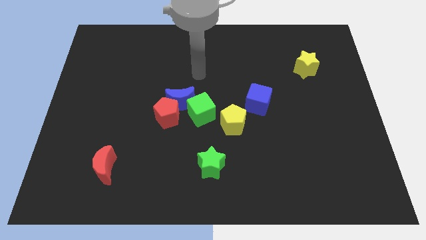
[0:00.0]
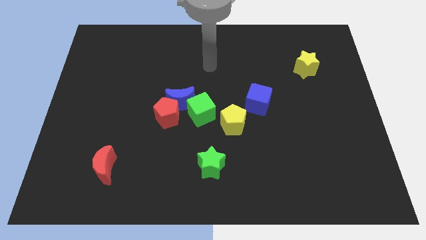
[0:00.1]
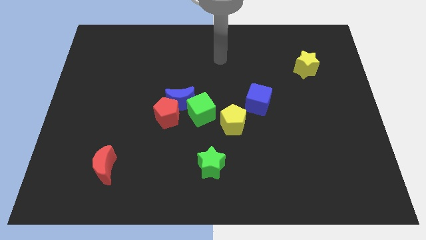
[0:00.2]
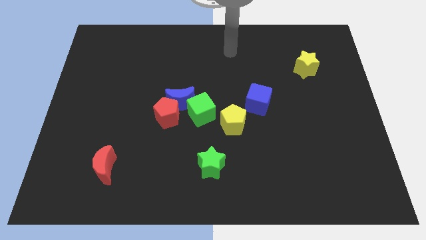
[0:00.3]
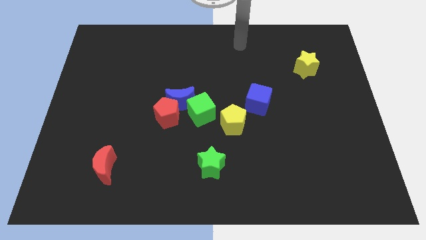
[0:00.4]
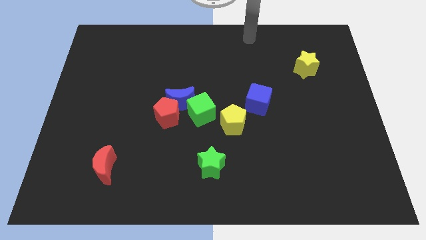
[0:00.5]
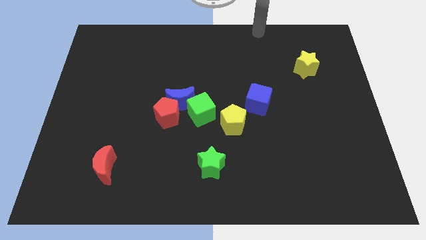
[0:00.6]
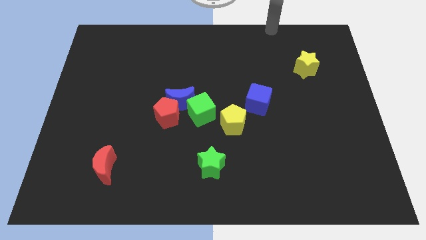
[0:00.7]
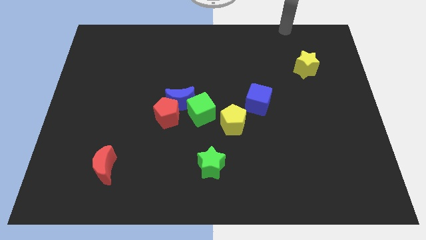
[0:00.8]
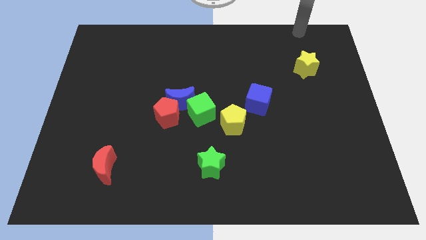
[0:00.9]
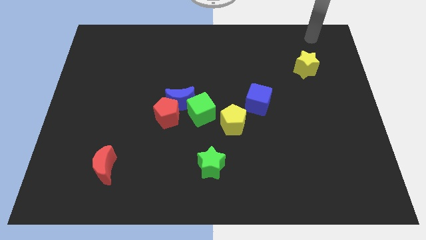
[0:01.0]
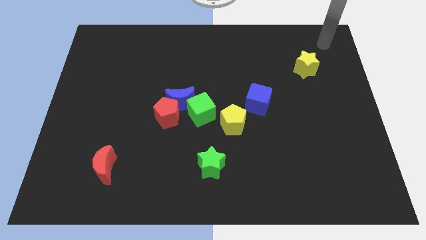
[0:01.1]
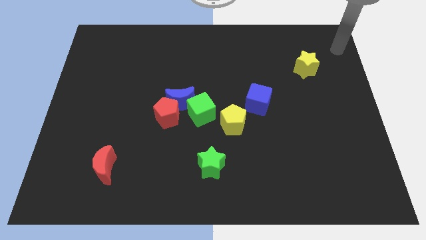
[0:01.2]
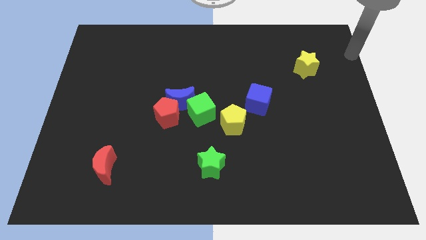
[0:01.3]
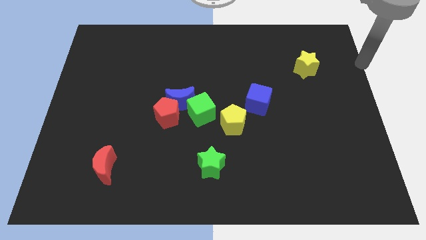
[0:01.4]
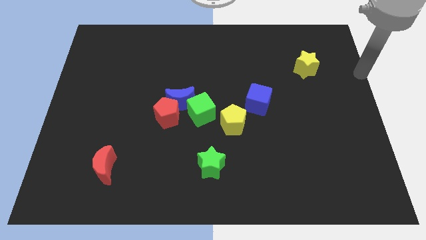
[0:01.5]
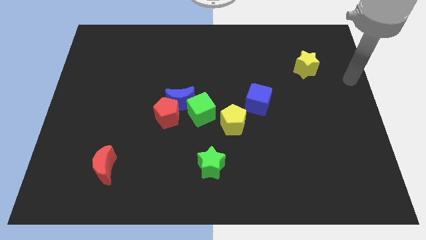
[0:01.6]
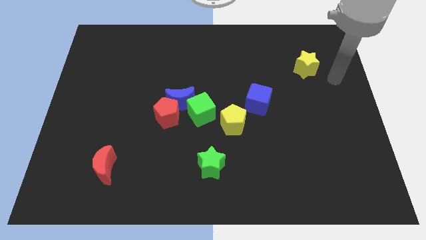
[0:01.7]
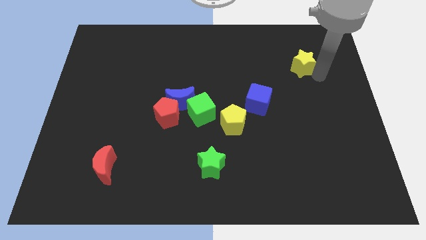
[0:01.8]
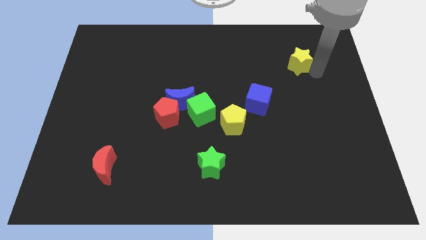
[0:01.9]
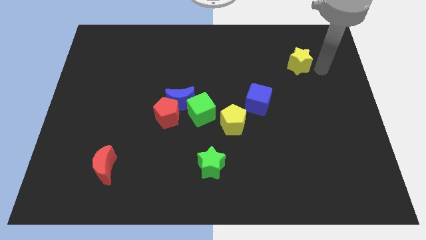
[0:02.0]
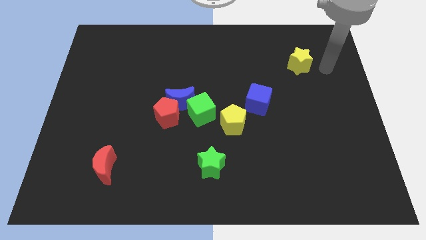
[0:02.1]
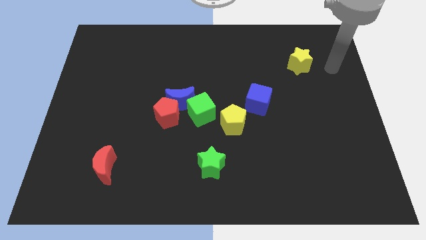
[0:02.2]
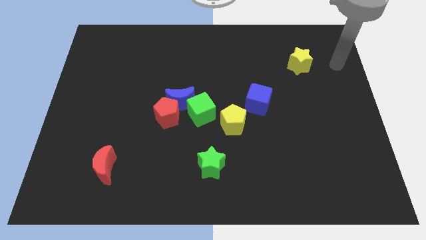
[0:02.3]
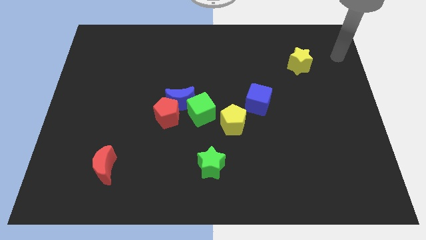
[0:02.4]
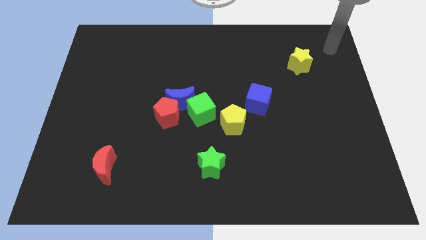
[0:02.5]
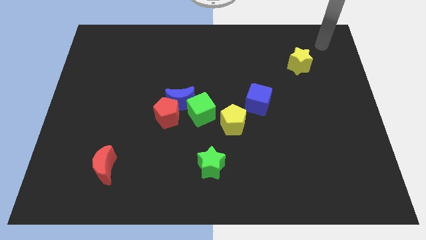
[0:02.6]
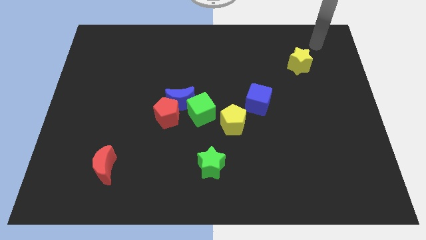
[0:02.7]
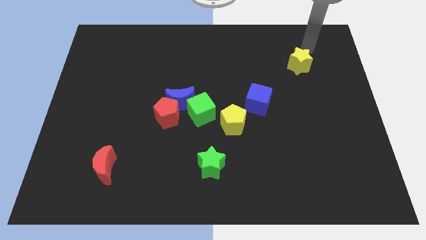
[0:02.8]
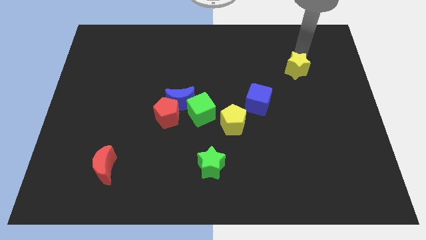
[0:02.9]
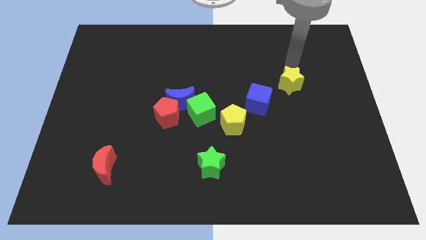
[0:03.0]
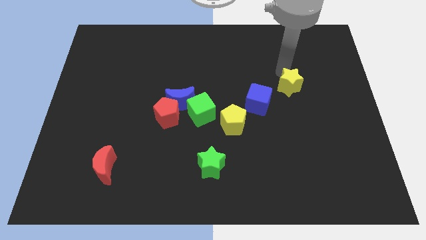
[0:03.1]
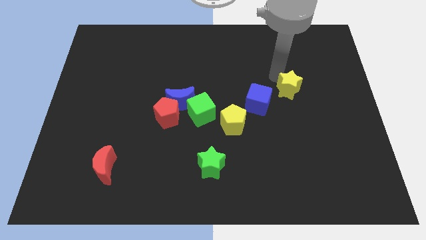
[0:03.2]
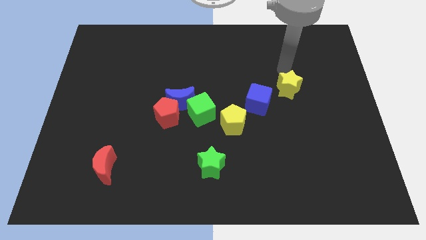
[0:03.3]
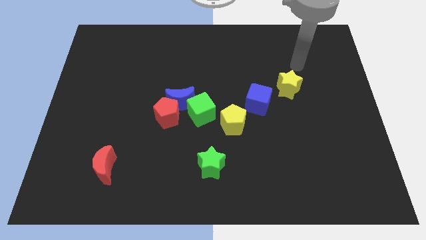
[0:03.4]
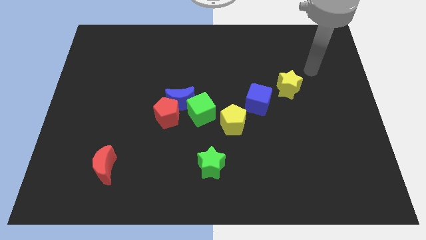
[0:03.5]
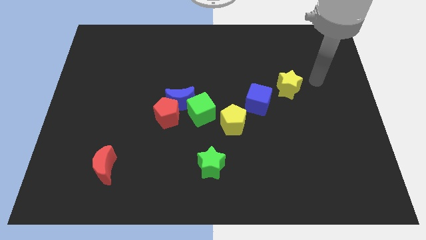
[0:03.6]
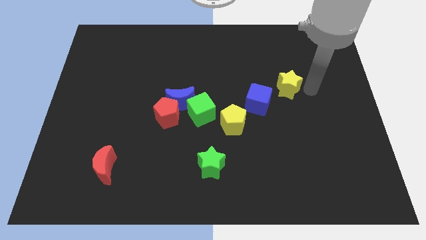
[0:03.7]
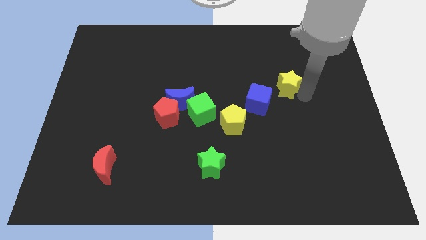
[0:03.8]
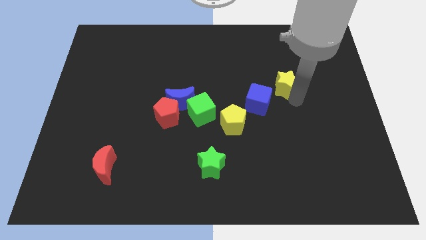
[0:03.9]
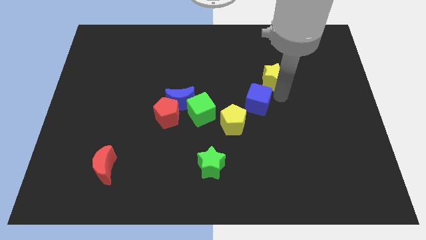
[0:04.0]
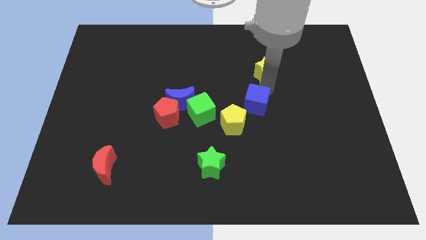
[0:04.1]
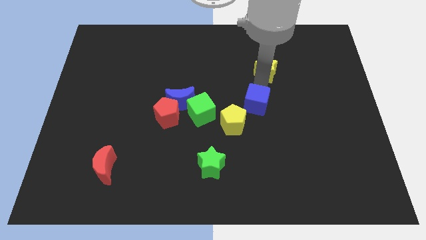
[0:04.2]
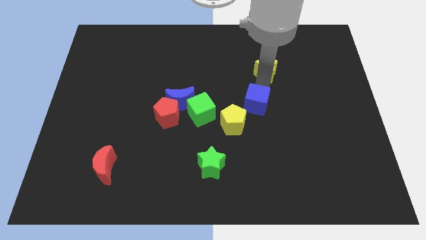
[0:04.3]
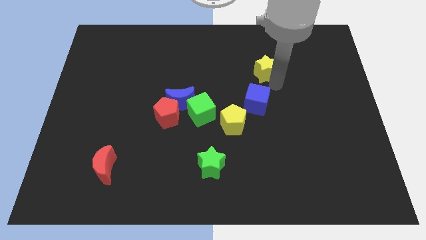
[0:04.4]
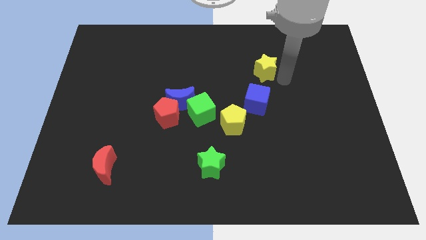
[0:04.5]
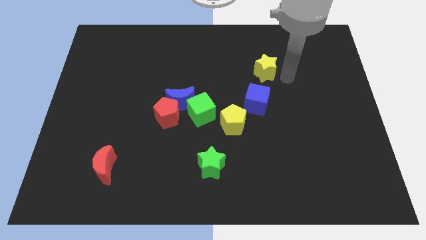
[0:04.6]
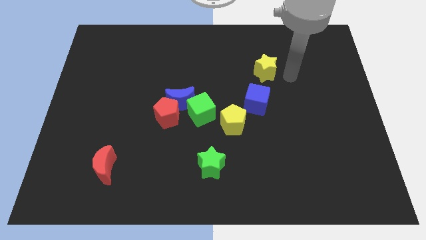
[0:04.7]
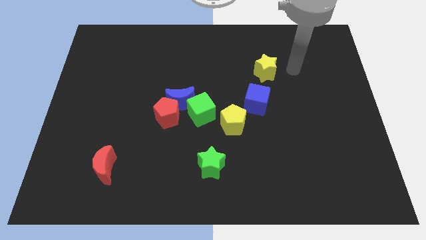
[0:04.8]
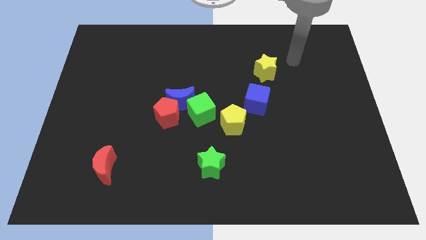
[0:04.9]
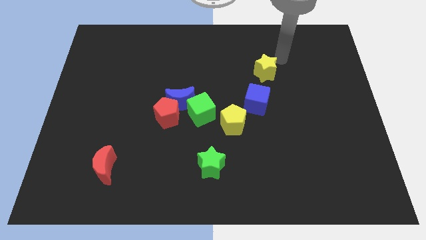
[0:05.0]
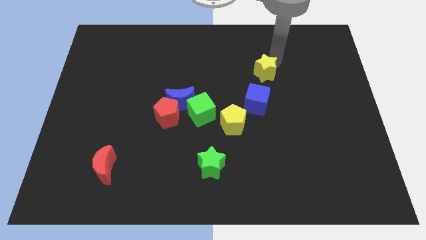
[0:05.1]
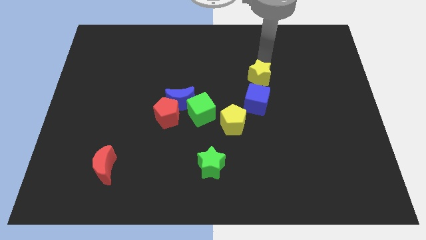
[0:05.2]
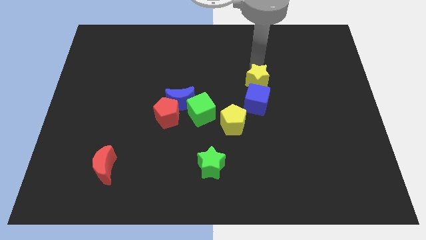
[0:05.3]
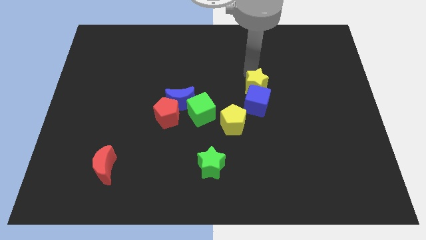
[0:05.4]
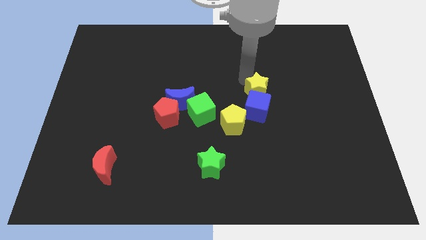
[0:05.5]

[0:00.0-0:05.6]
move the yellow star into the blue moon

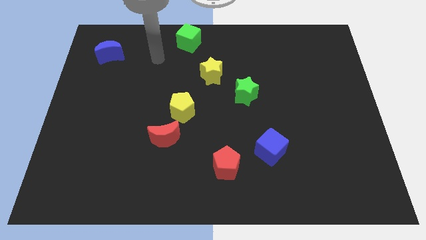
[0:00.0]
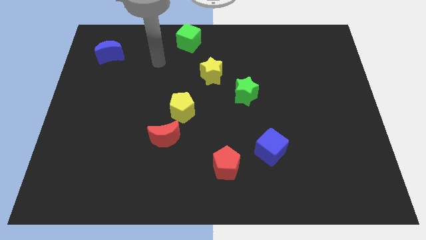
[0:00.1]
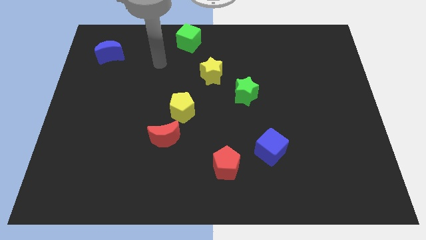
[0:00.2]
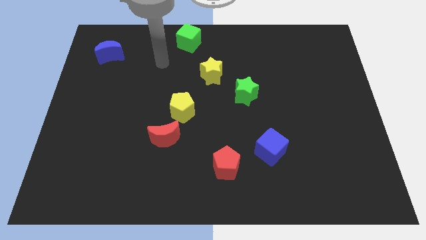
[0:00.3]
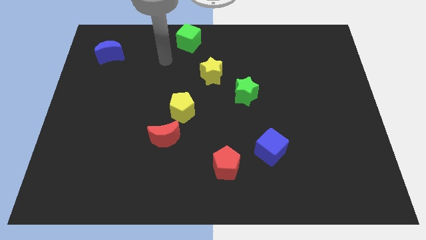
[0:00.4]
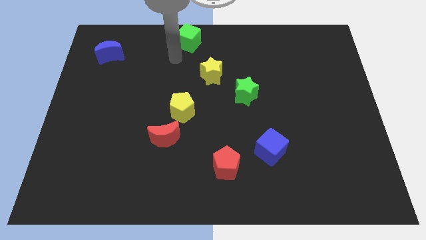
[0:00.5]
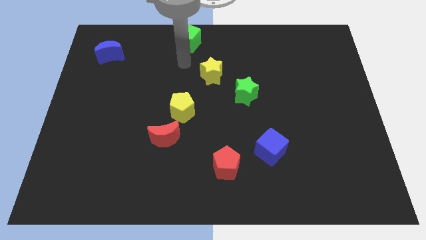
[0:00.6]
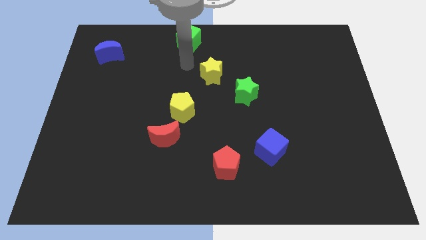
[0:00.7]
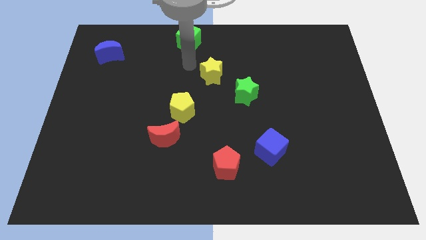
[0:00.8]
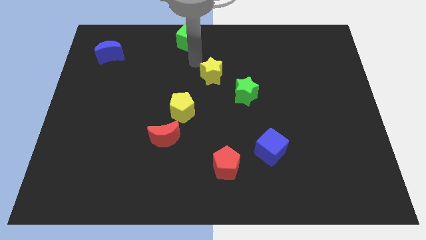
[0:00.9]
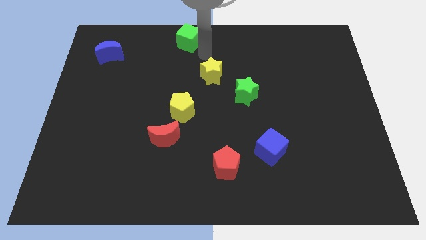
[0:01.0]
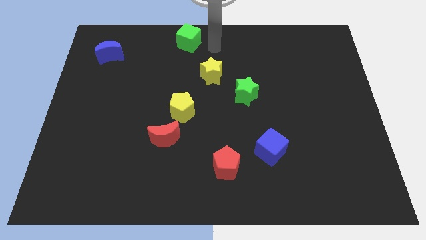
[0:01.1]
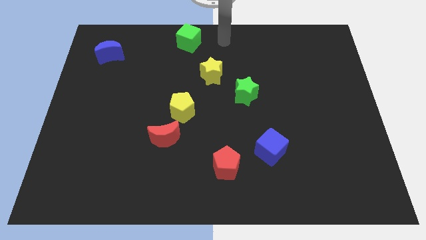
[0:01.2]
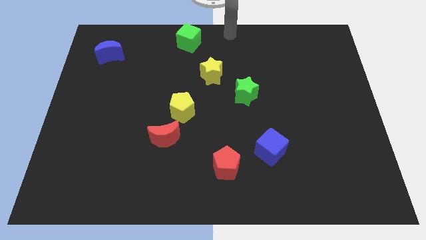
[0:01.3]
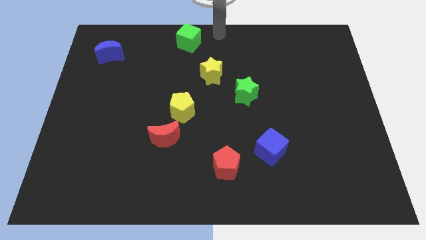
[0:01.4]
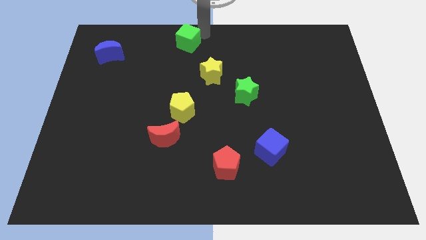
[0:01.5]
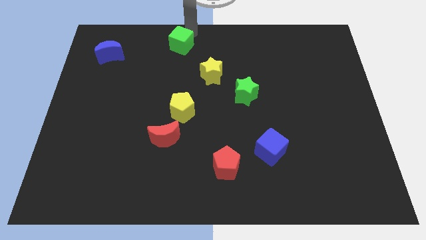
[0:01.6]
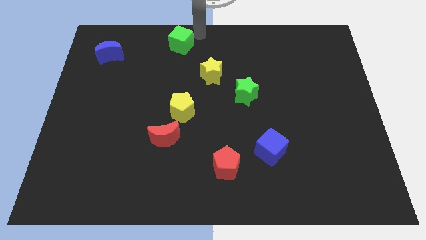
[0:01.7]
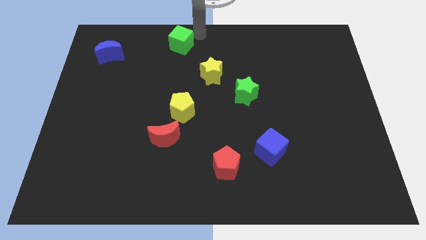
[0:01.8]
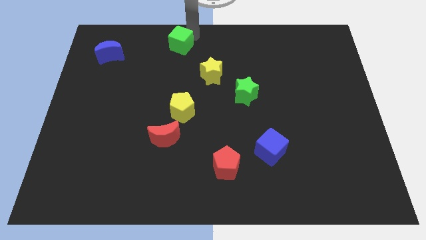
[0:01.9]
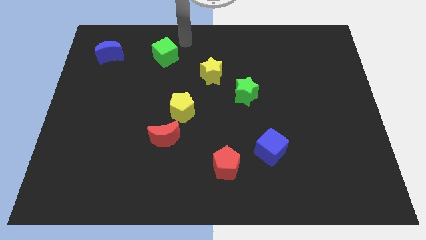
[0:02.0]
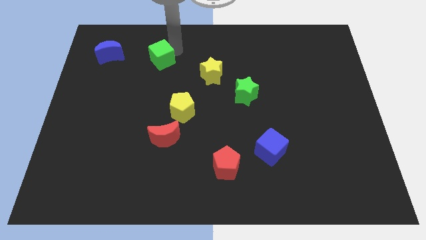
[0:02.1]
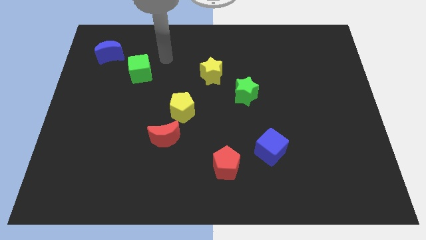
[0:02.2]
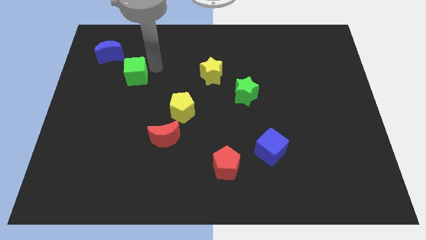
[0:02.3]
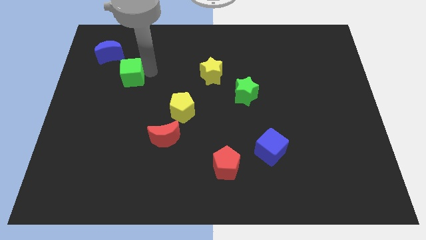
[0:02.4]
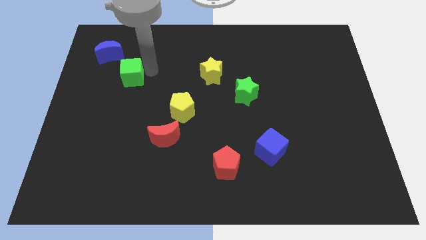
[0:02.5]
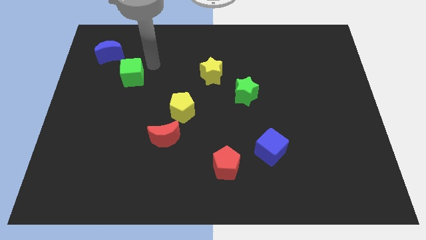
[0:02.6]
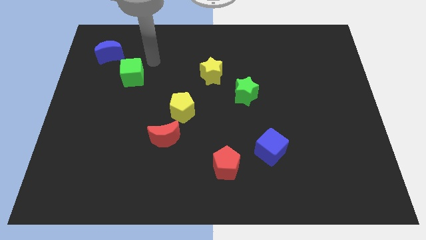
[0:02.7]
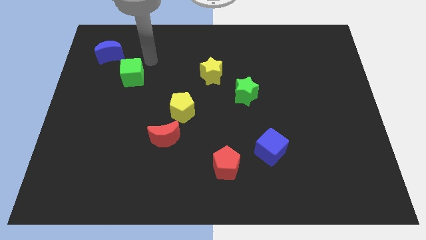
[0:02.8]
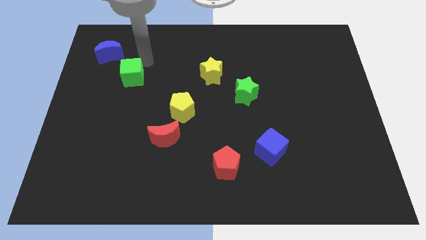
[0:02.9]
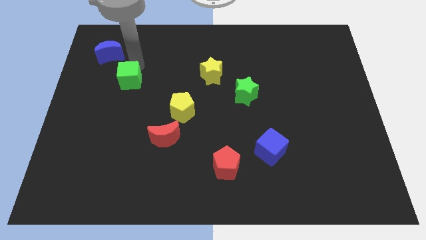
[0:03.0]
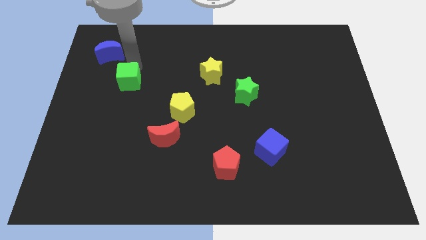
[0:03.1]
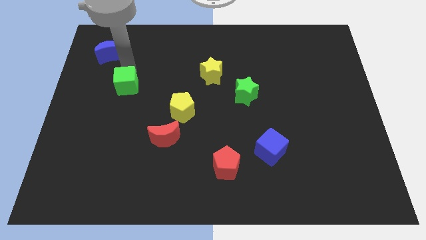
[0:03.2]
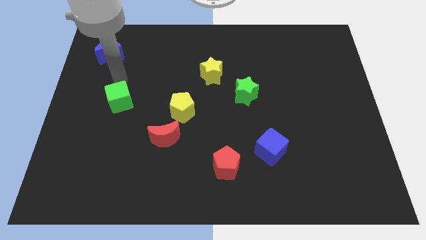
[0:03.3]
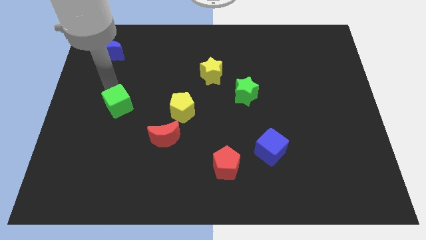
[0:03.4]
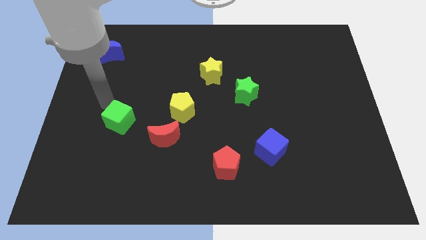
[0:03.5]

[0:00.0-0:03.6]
move the green cube to the left of the yellow pentagon
